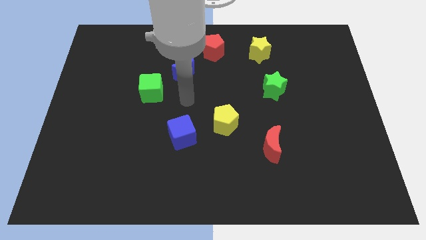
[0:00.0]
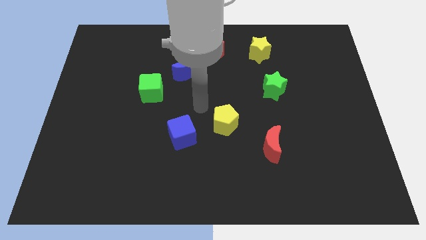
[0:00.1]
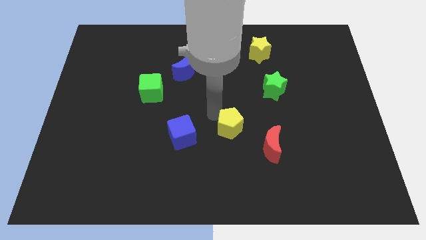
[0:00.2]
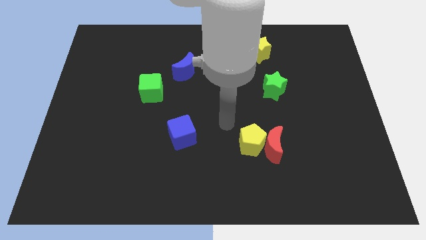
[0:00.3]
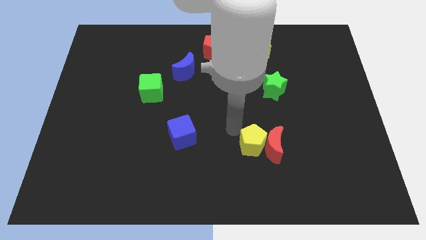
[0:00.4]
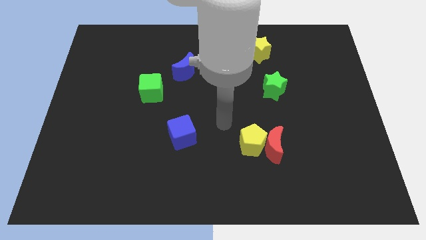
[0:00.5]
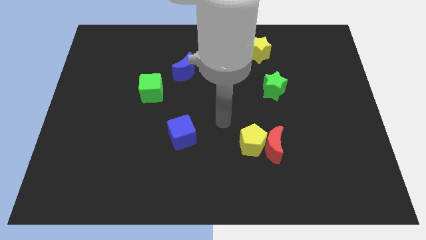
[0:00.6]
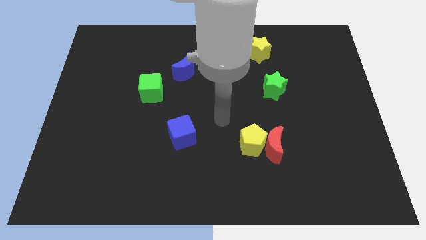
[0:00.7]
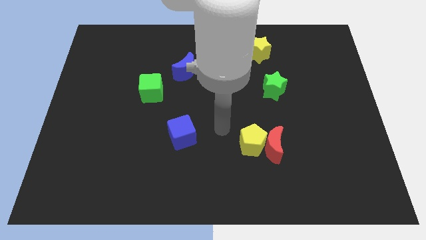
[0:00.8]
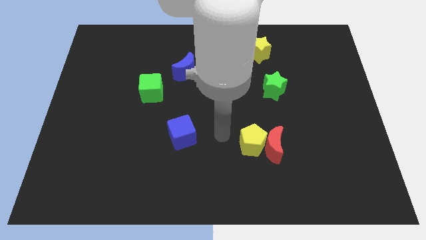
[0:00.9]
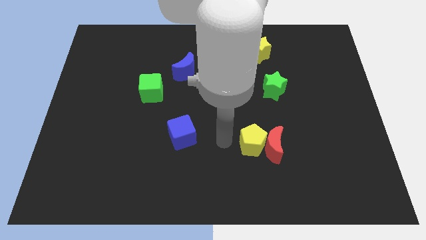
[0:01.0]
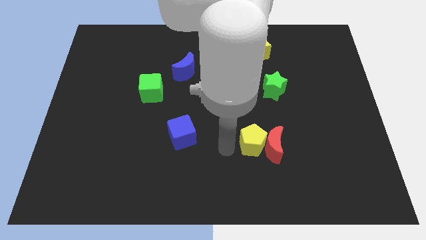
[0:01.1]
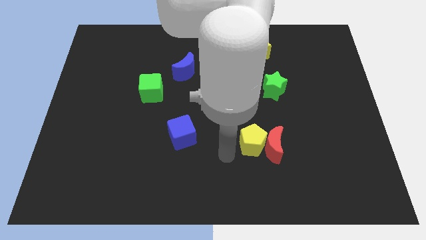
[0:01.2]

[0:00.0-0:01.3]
push the yellow pentagon into the red crescent

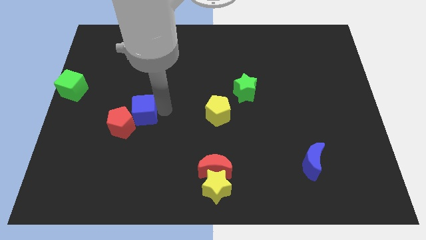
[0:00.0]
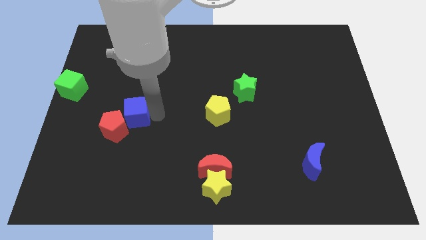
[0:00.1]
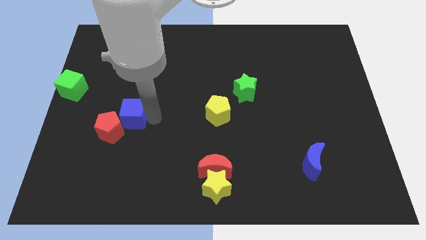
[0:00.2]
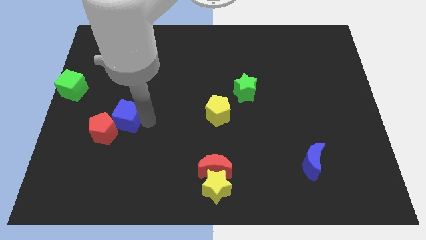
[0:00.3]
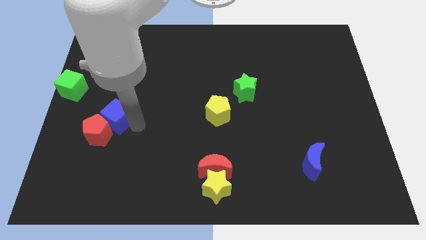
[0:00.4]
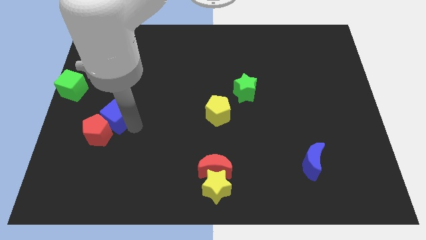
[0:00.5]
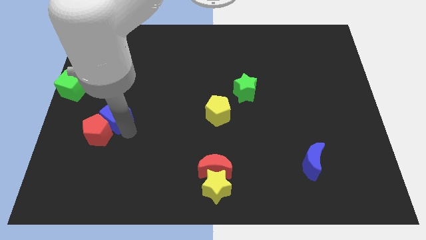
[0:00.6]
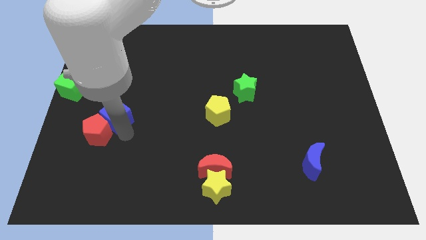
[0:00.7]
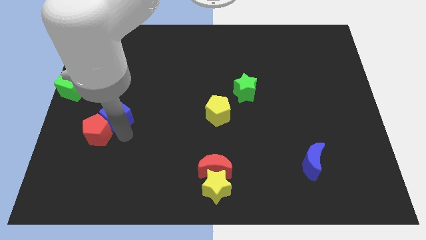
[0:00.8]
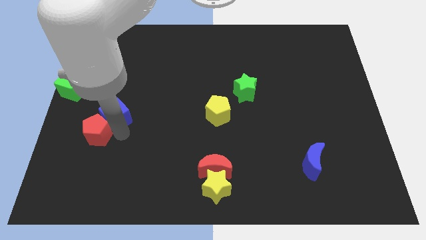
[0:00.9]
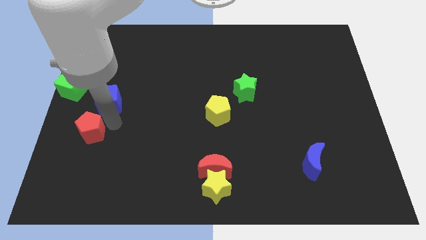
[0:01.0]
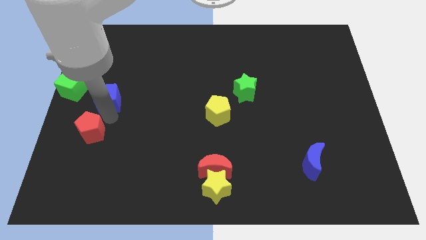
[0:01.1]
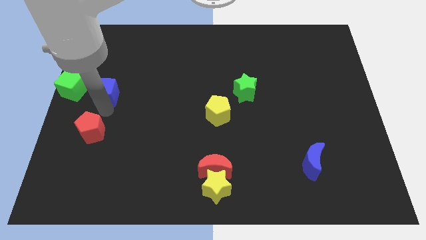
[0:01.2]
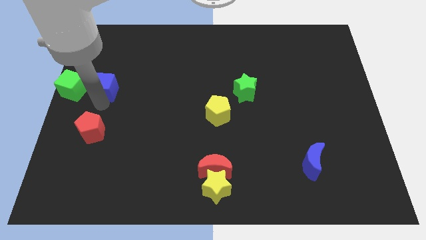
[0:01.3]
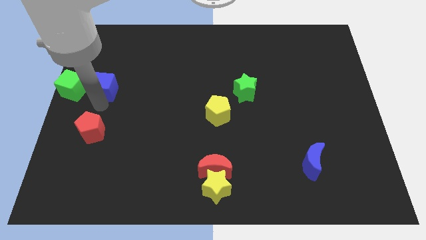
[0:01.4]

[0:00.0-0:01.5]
move blue cube to the right of green cube

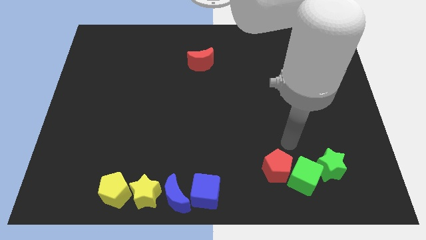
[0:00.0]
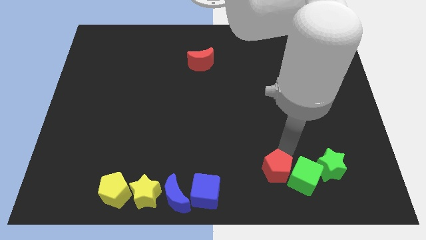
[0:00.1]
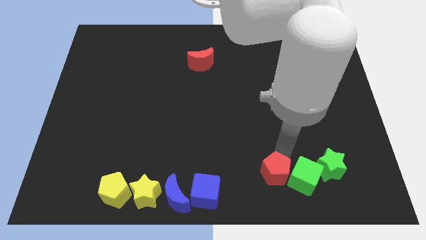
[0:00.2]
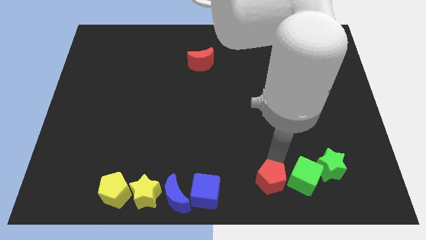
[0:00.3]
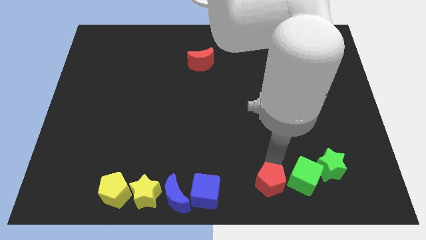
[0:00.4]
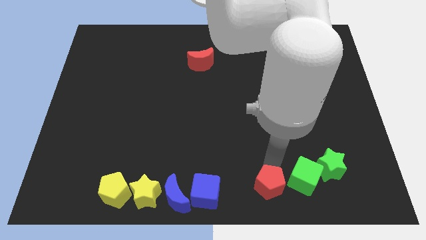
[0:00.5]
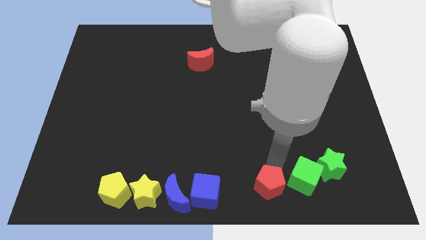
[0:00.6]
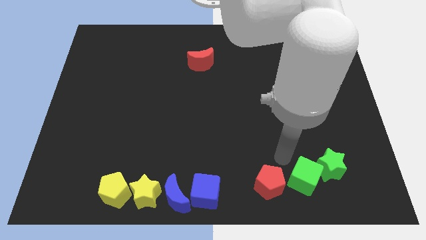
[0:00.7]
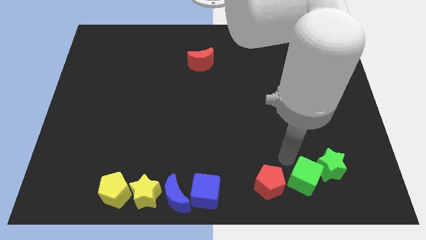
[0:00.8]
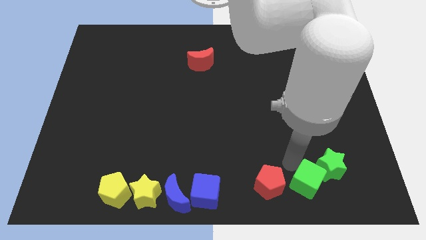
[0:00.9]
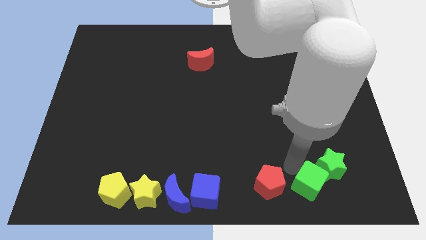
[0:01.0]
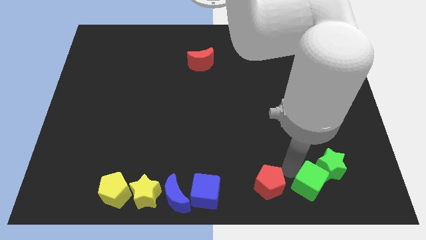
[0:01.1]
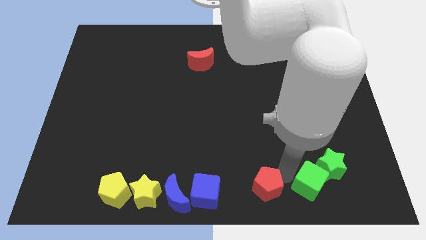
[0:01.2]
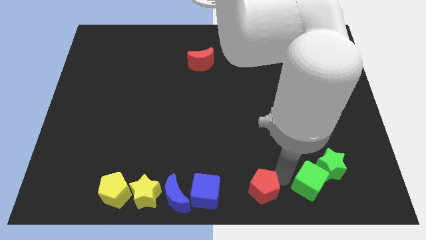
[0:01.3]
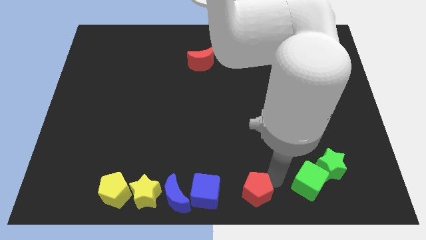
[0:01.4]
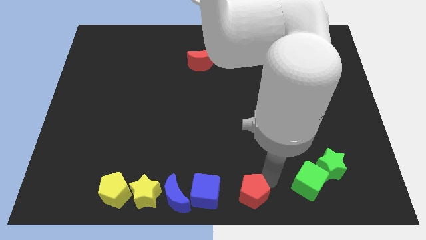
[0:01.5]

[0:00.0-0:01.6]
separate red pentagon from the green star
